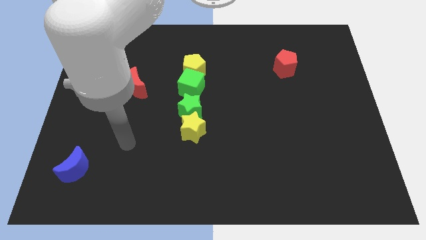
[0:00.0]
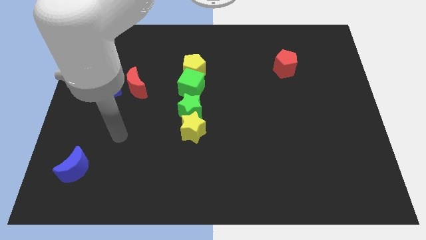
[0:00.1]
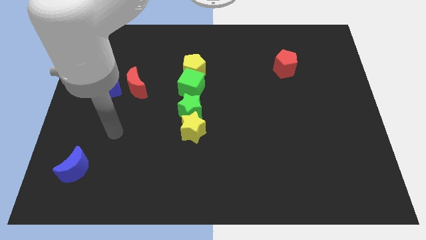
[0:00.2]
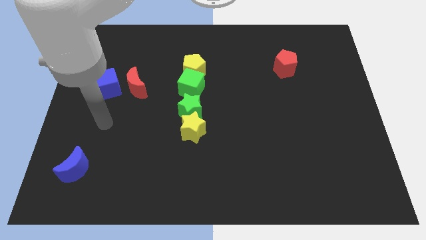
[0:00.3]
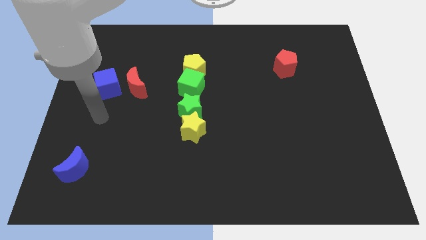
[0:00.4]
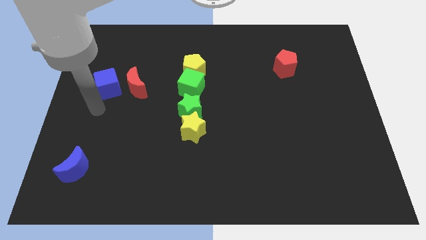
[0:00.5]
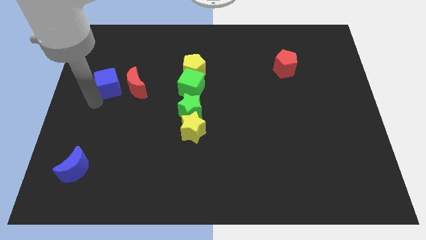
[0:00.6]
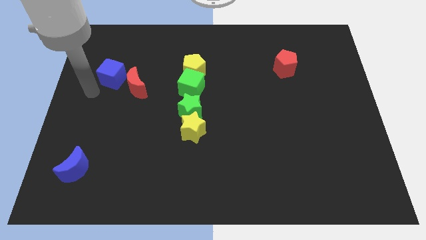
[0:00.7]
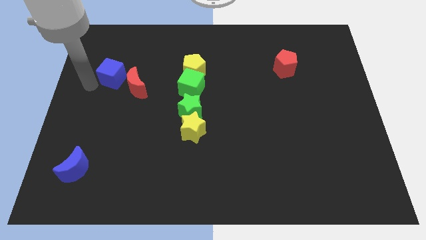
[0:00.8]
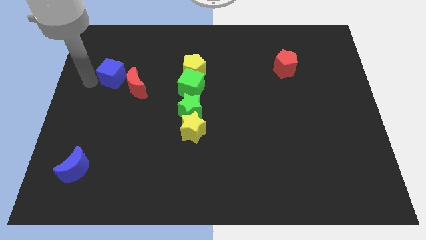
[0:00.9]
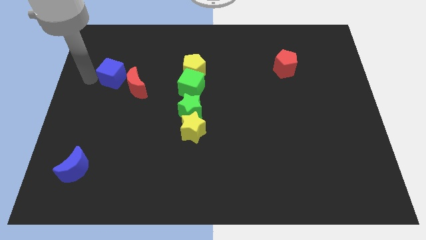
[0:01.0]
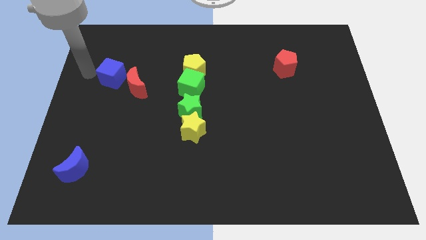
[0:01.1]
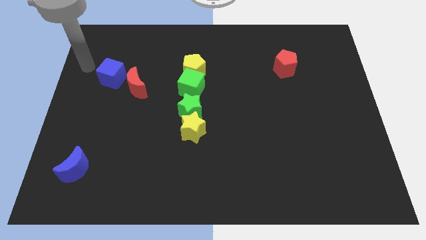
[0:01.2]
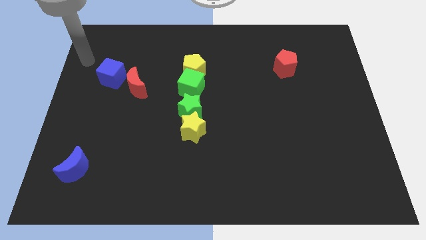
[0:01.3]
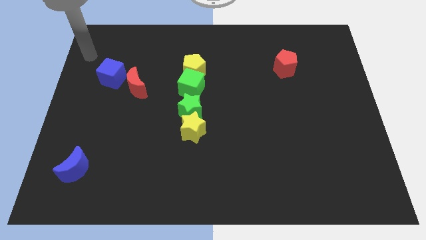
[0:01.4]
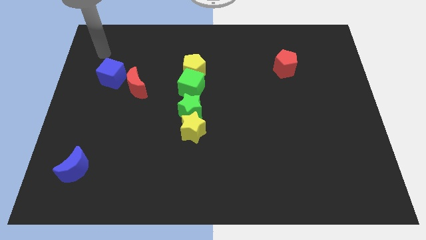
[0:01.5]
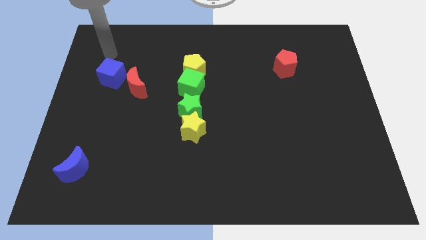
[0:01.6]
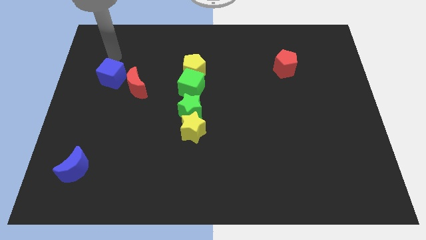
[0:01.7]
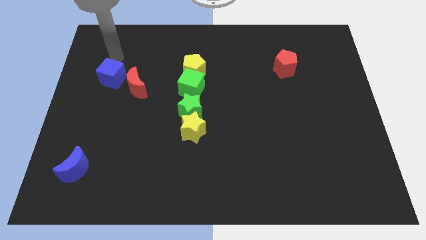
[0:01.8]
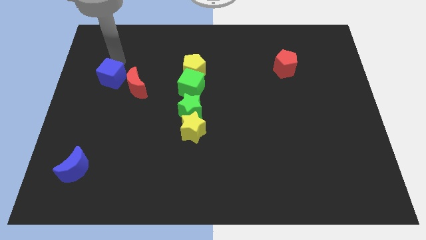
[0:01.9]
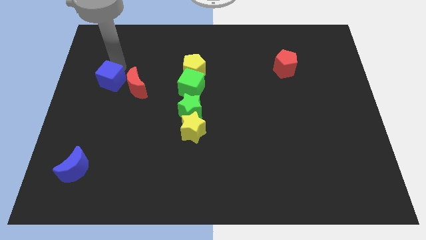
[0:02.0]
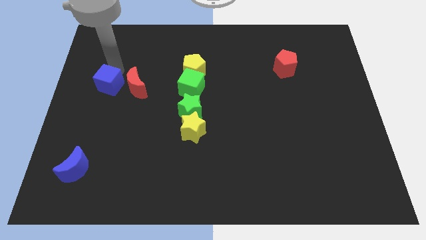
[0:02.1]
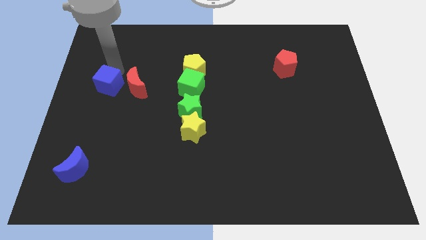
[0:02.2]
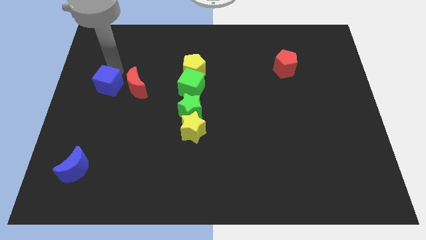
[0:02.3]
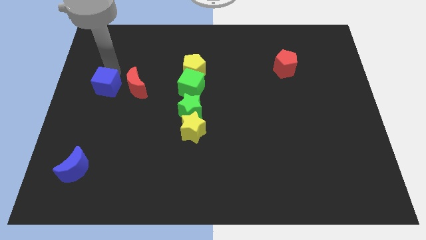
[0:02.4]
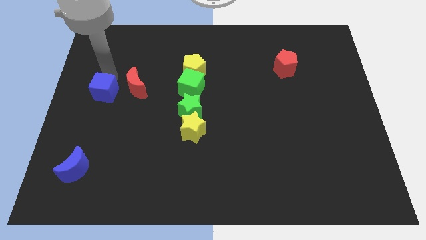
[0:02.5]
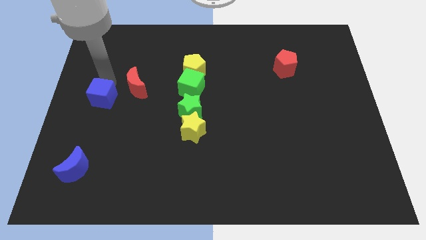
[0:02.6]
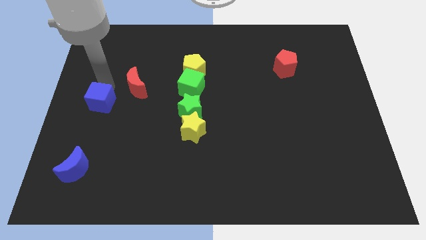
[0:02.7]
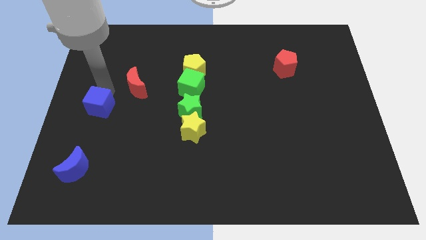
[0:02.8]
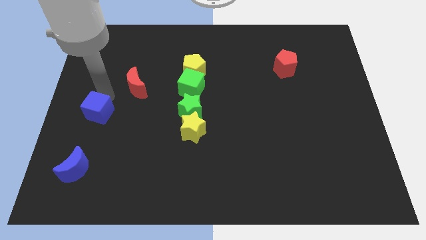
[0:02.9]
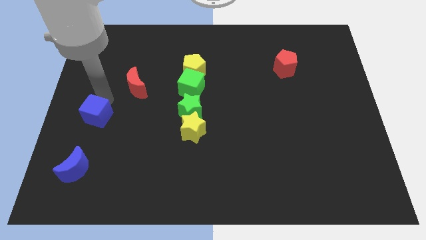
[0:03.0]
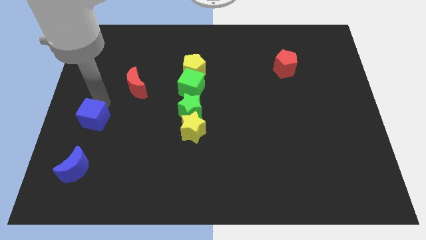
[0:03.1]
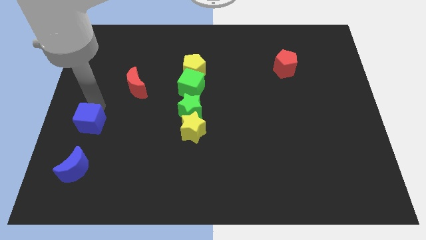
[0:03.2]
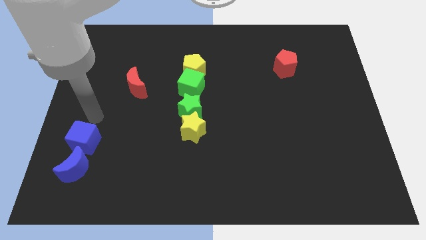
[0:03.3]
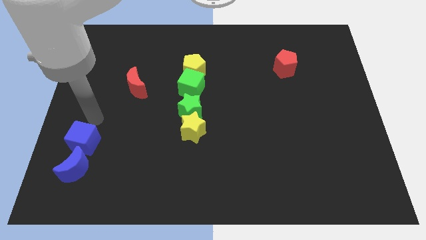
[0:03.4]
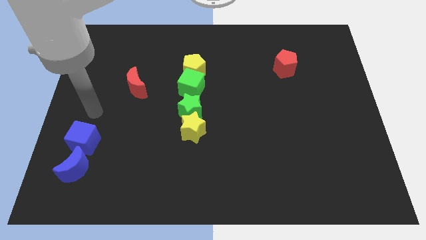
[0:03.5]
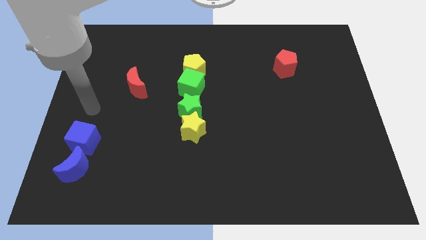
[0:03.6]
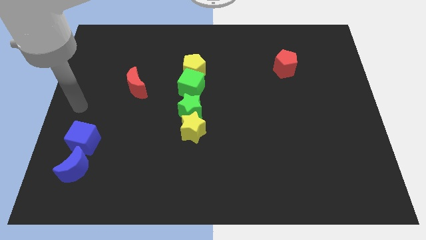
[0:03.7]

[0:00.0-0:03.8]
push the blue cube to the top of the blue moon

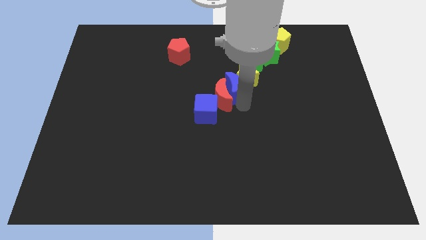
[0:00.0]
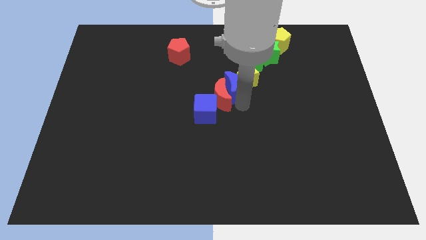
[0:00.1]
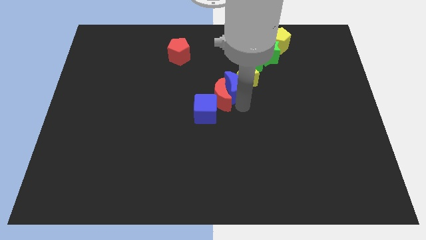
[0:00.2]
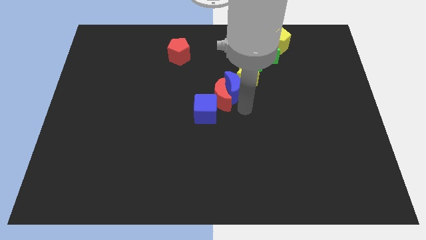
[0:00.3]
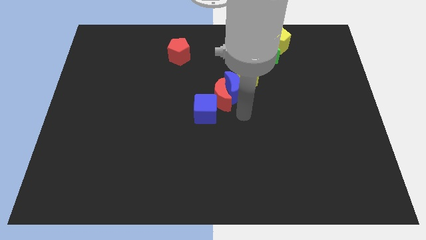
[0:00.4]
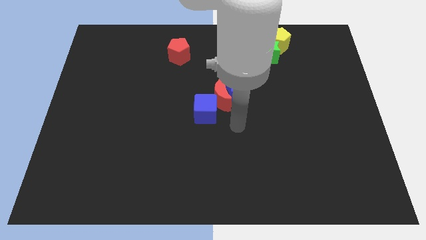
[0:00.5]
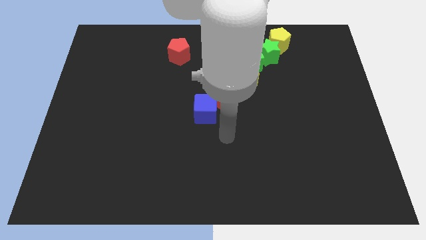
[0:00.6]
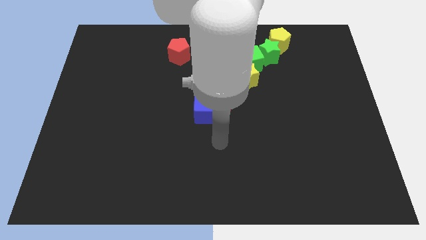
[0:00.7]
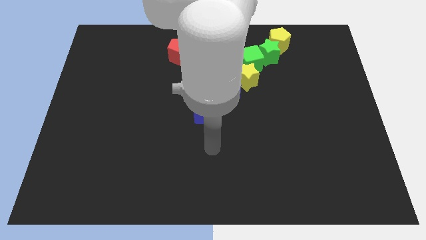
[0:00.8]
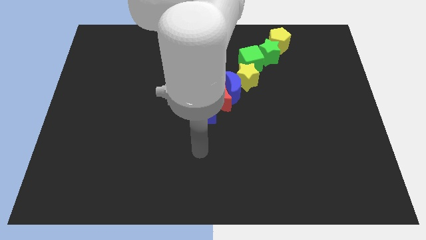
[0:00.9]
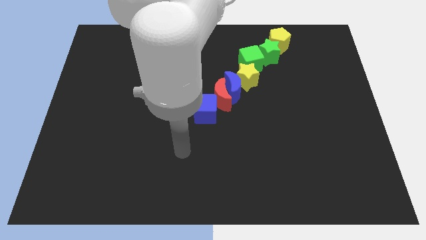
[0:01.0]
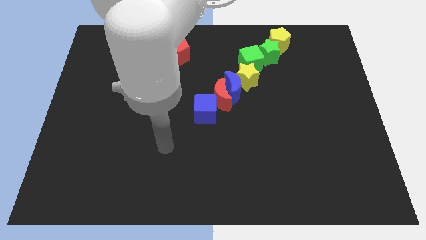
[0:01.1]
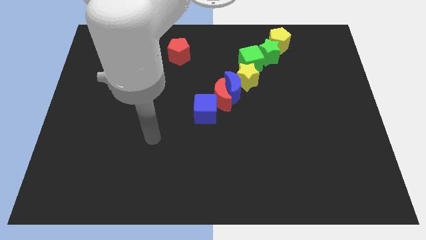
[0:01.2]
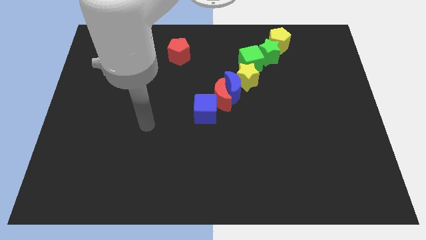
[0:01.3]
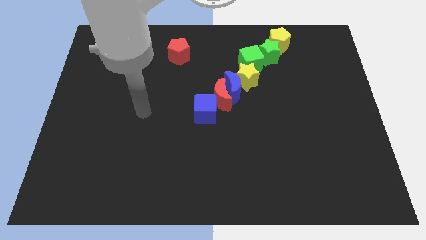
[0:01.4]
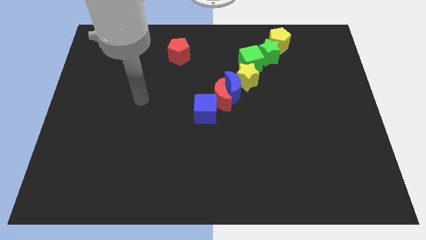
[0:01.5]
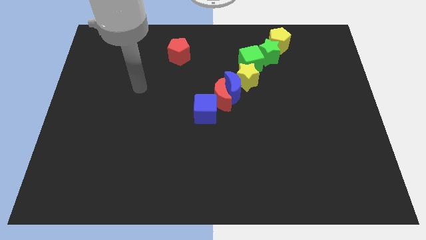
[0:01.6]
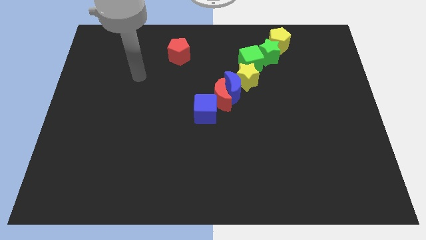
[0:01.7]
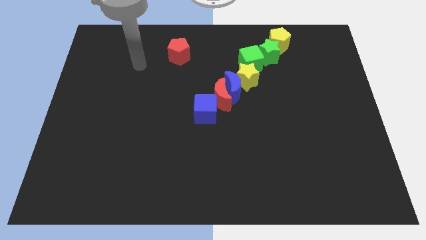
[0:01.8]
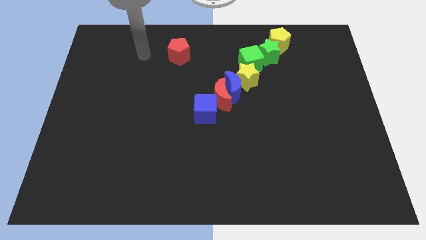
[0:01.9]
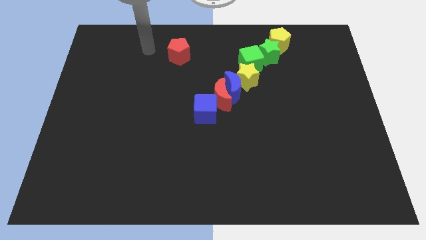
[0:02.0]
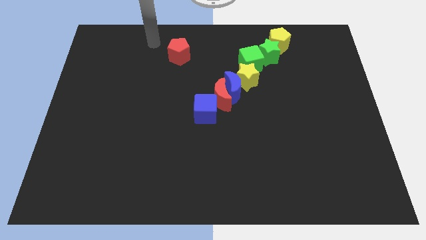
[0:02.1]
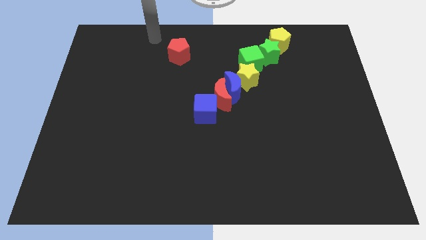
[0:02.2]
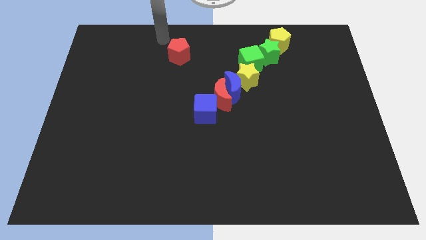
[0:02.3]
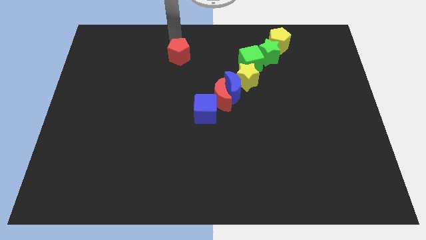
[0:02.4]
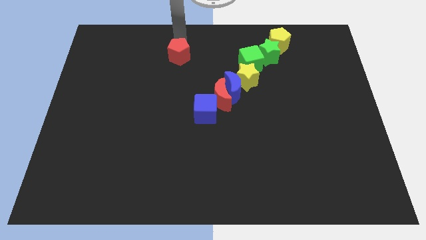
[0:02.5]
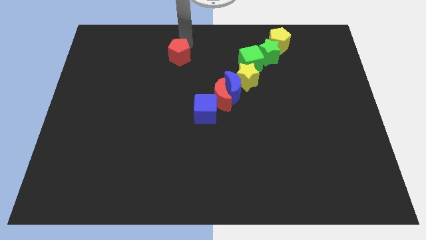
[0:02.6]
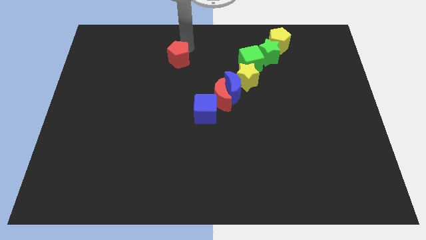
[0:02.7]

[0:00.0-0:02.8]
move your arm toward the red pentagon

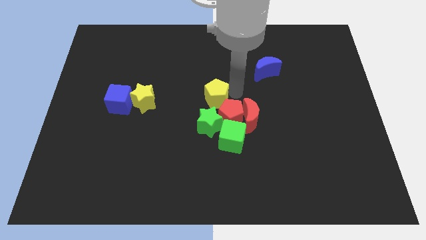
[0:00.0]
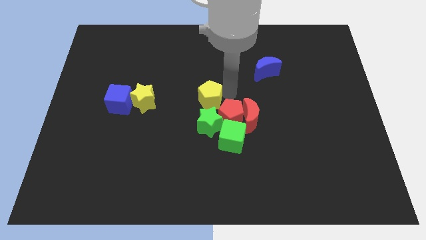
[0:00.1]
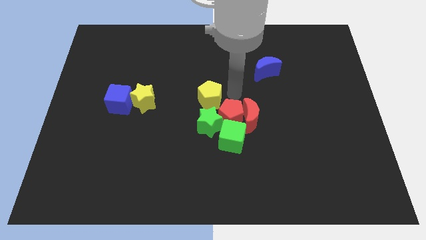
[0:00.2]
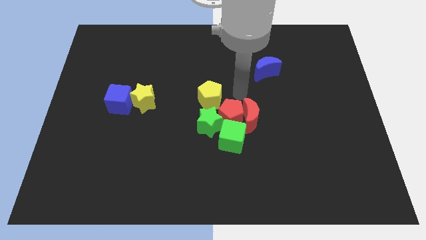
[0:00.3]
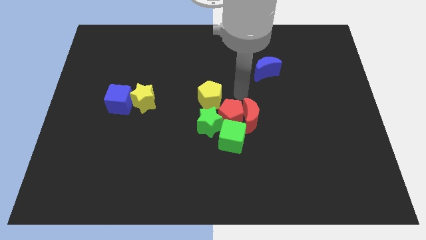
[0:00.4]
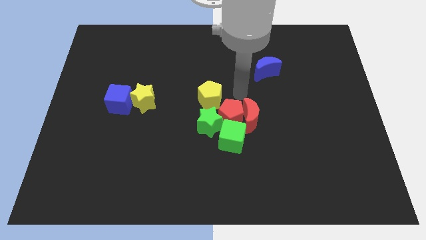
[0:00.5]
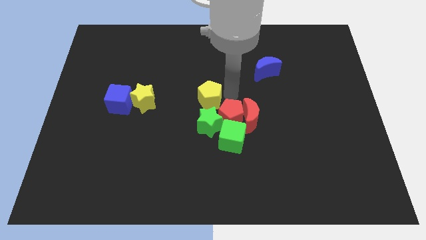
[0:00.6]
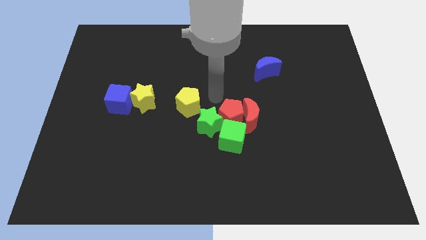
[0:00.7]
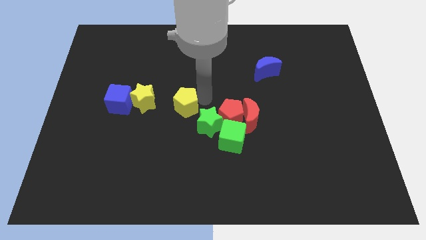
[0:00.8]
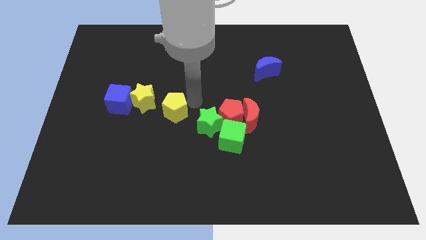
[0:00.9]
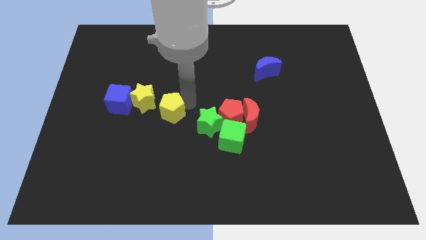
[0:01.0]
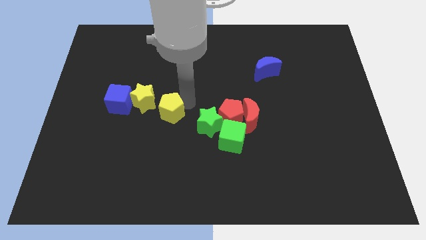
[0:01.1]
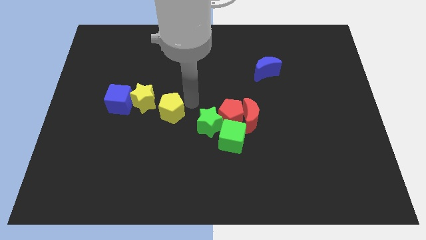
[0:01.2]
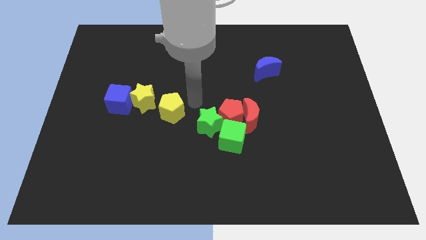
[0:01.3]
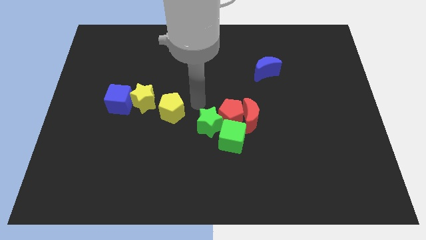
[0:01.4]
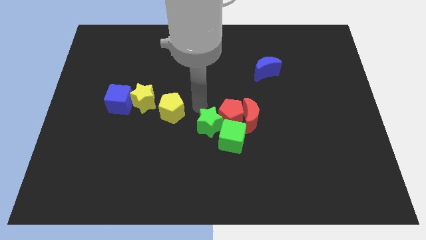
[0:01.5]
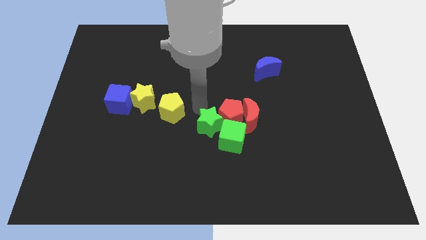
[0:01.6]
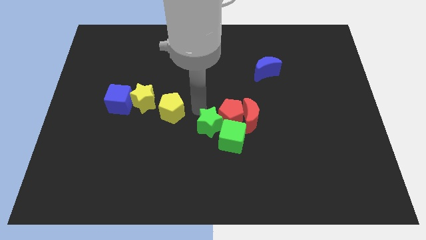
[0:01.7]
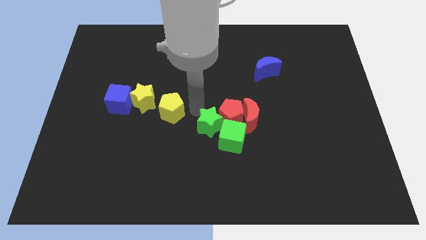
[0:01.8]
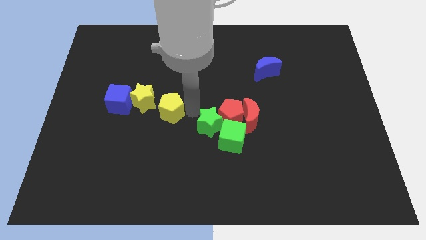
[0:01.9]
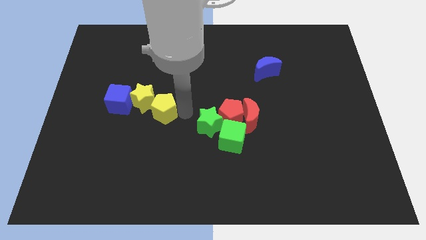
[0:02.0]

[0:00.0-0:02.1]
slide yellow pentagon into yellow star

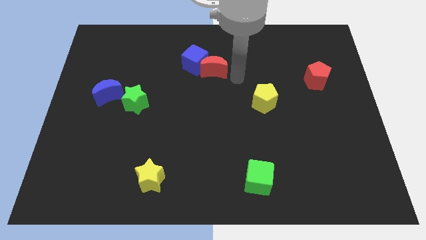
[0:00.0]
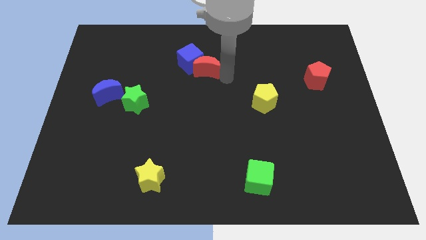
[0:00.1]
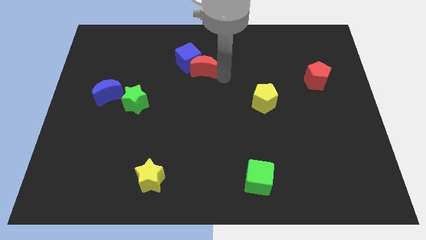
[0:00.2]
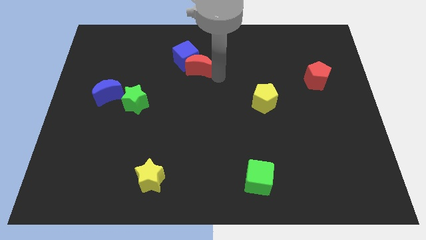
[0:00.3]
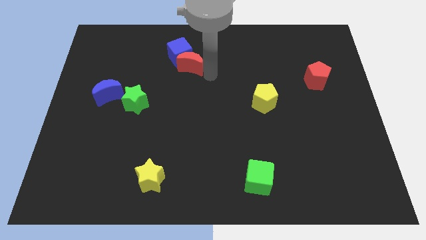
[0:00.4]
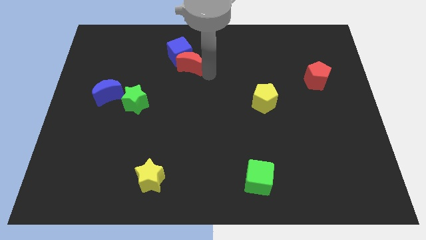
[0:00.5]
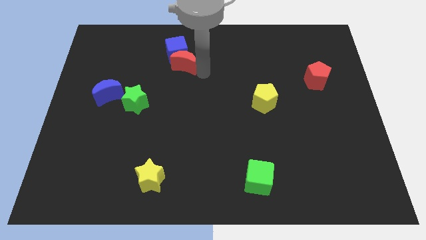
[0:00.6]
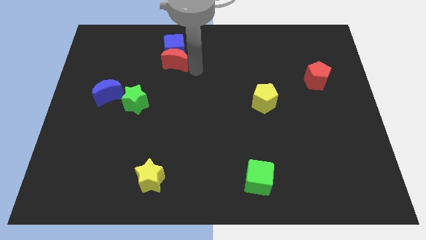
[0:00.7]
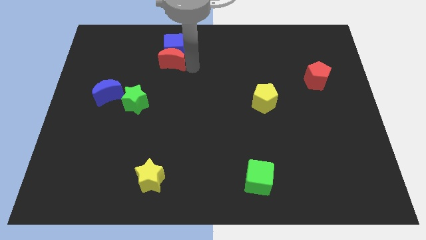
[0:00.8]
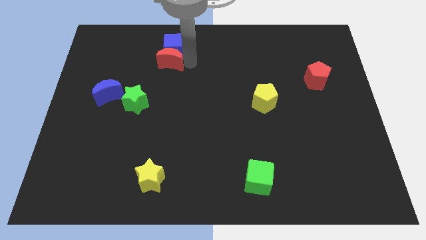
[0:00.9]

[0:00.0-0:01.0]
move the blue cube with a red moon towards the right center of the board
